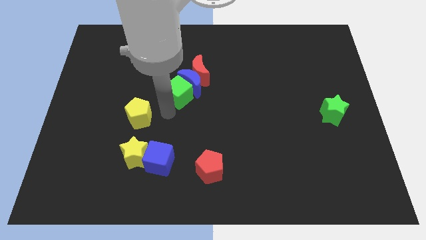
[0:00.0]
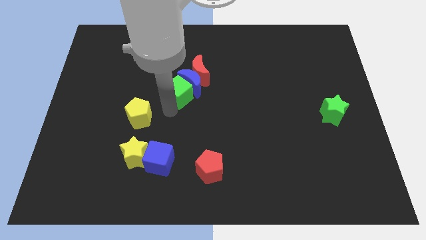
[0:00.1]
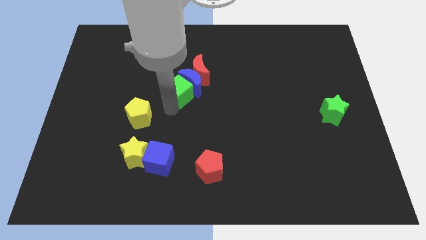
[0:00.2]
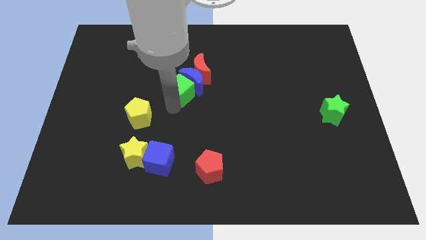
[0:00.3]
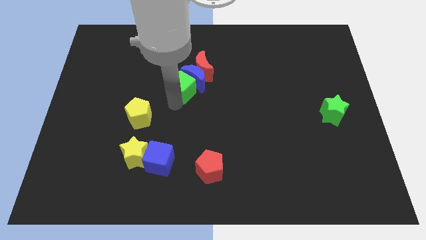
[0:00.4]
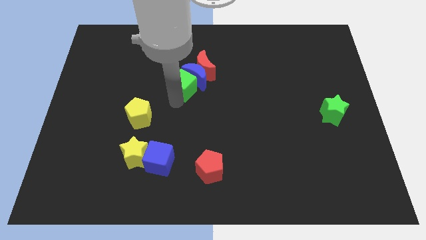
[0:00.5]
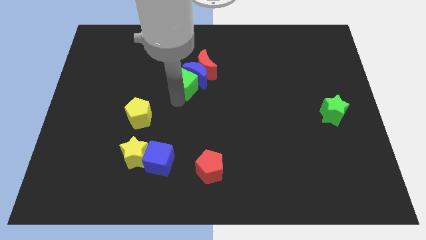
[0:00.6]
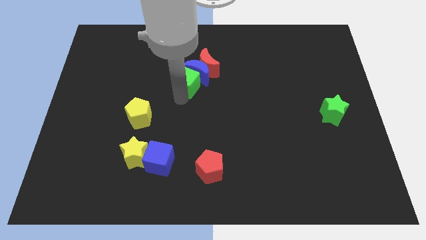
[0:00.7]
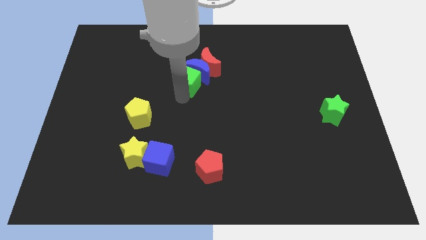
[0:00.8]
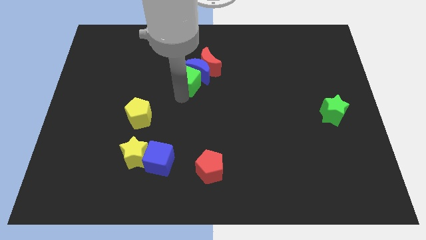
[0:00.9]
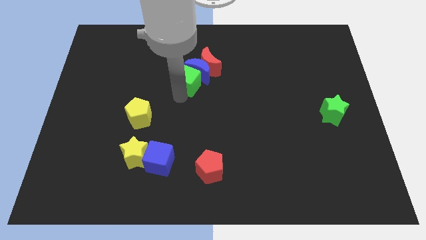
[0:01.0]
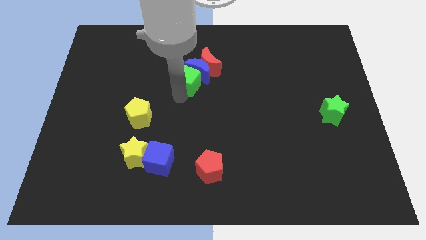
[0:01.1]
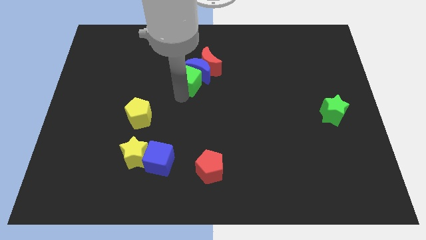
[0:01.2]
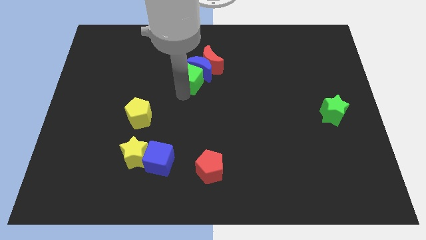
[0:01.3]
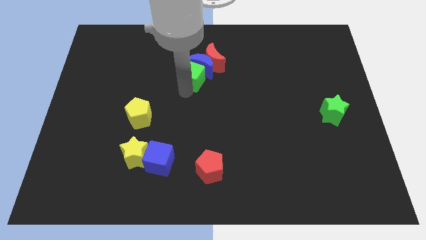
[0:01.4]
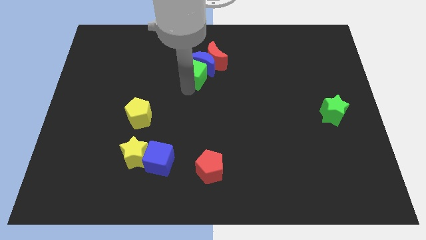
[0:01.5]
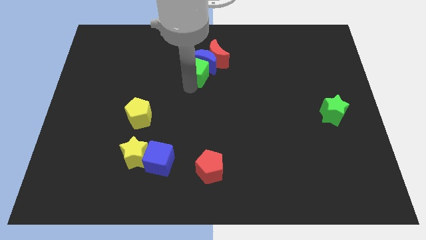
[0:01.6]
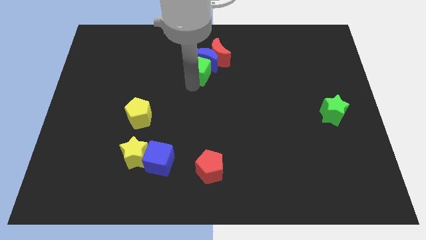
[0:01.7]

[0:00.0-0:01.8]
push the green cube below the blue crescent

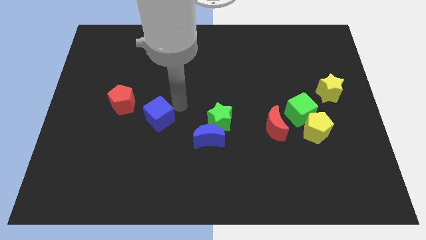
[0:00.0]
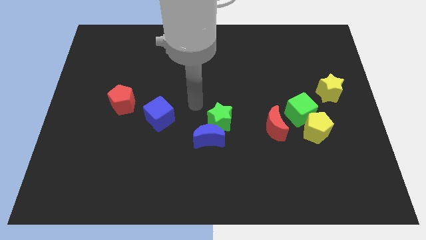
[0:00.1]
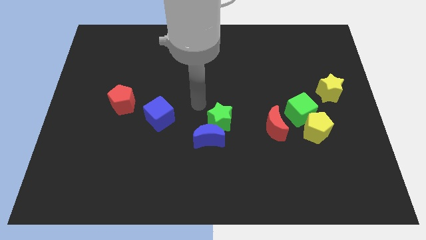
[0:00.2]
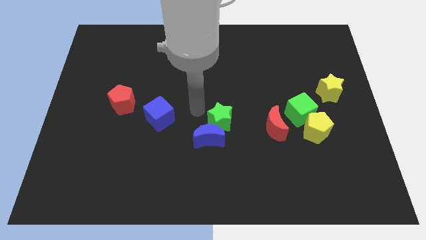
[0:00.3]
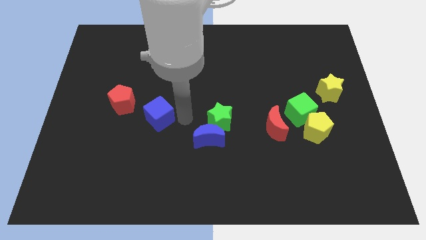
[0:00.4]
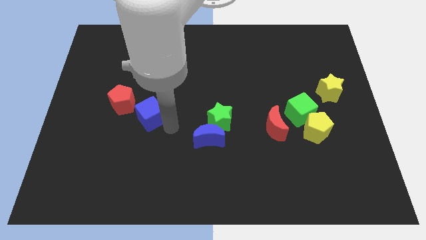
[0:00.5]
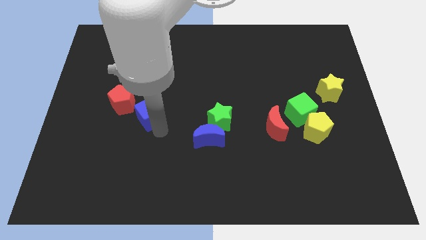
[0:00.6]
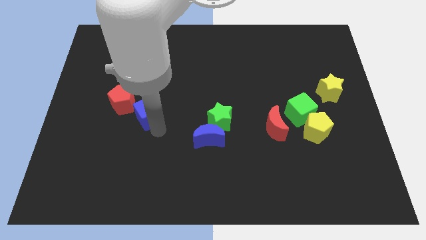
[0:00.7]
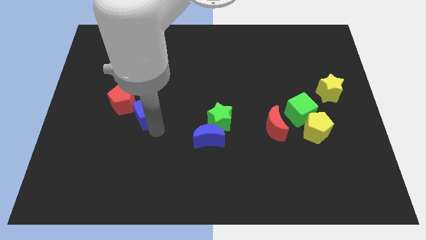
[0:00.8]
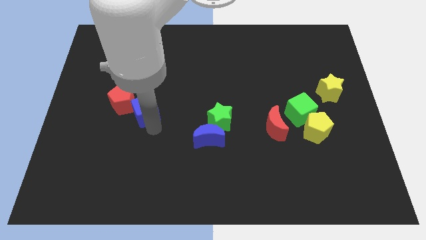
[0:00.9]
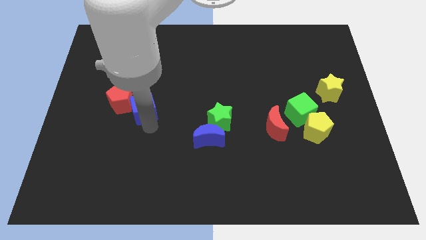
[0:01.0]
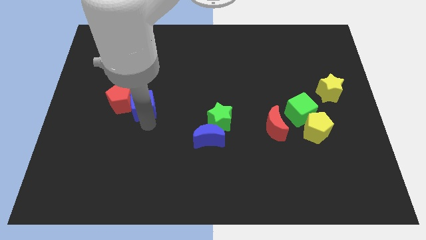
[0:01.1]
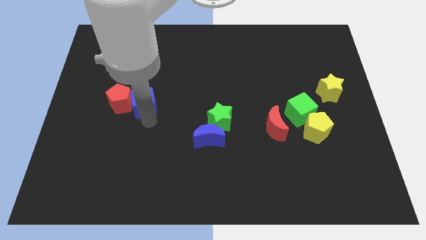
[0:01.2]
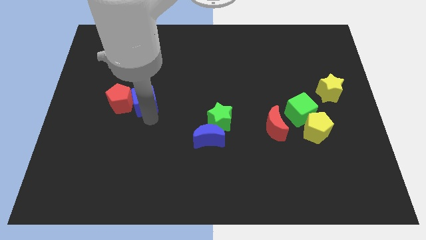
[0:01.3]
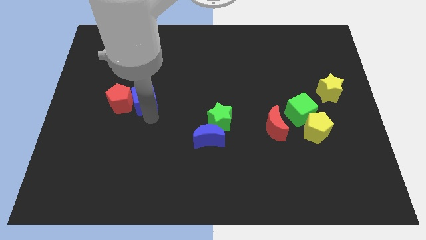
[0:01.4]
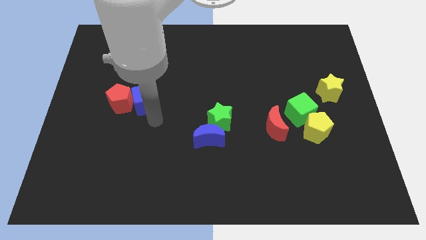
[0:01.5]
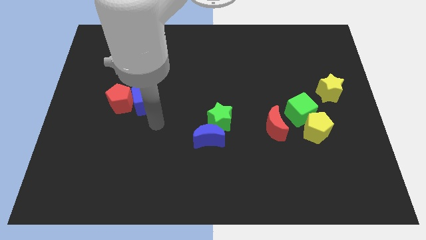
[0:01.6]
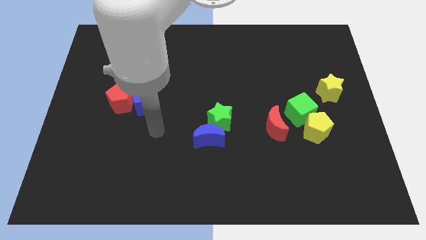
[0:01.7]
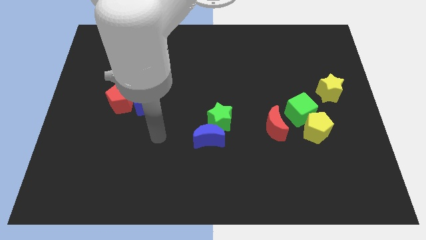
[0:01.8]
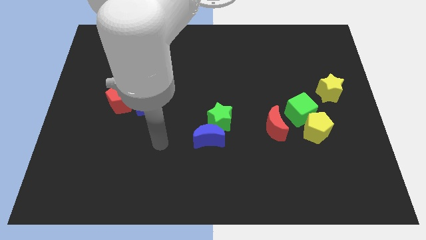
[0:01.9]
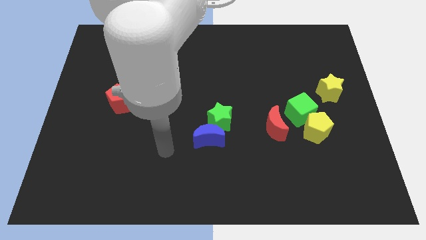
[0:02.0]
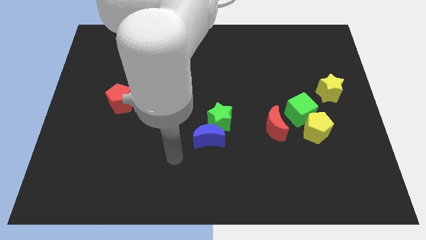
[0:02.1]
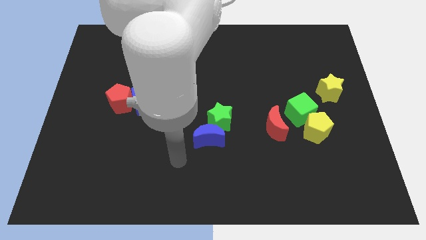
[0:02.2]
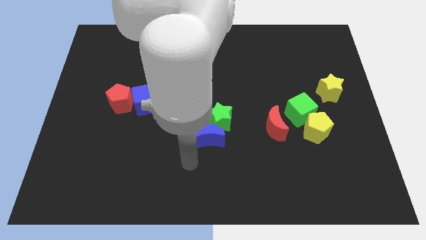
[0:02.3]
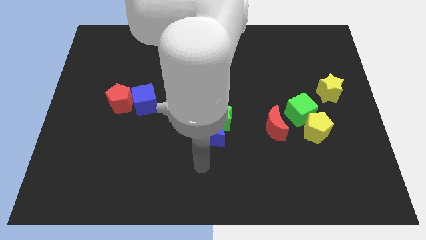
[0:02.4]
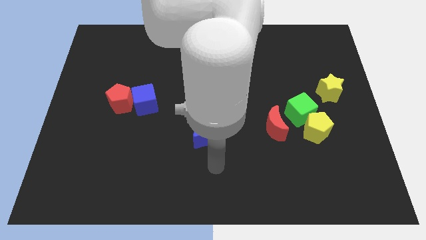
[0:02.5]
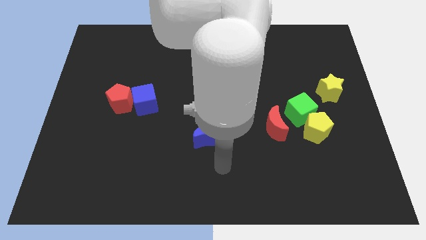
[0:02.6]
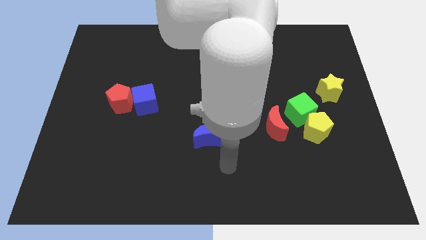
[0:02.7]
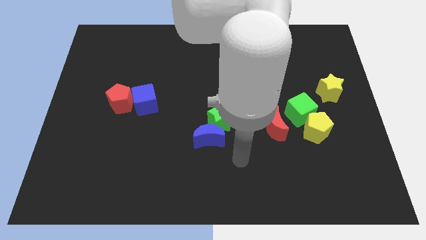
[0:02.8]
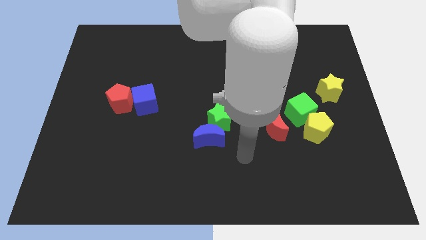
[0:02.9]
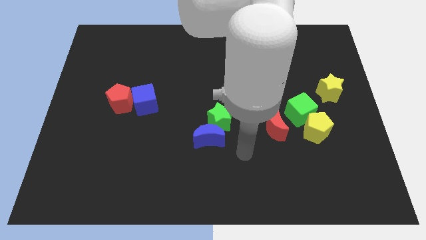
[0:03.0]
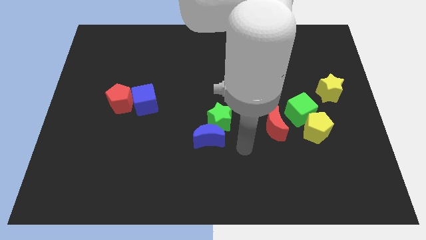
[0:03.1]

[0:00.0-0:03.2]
move blue cube into red pentagon

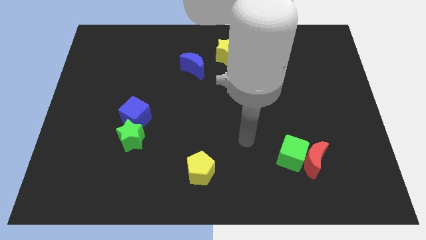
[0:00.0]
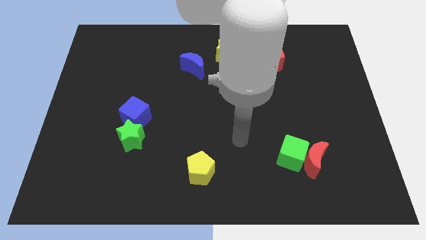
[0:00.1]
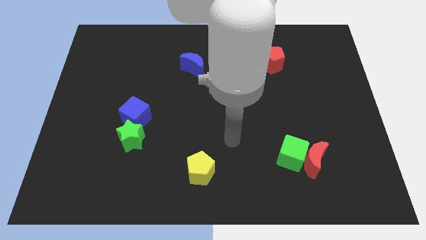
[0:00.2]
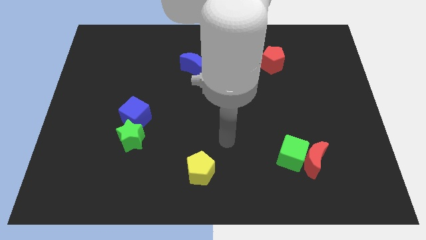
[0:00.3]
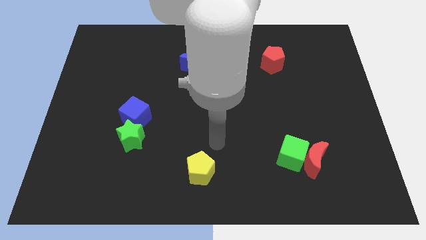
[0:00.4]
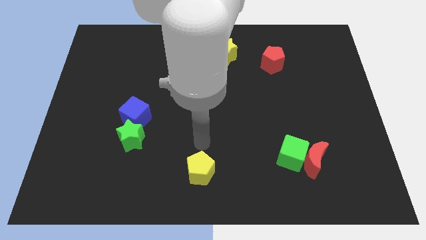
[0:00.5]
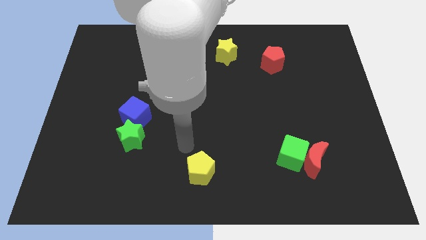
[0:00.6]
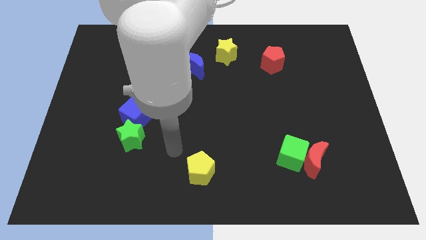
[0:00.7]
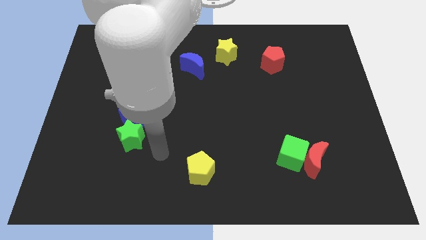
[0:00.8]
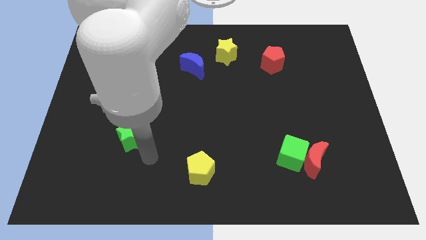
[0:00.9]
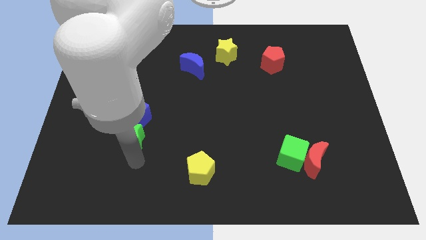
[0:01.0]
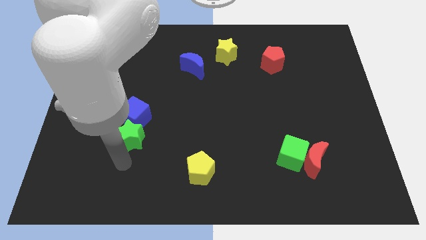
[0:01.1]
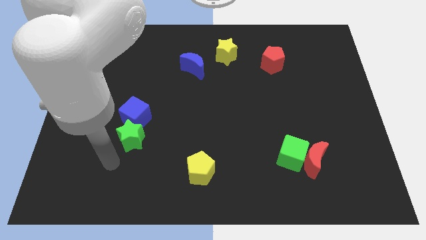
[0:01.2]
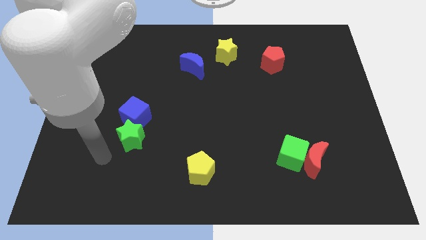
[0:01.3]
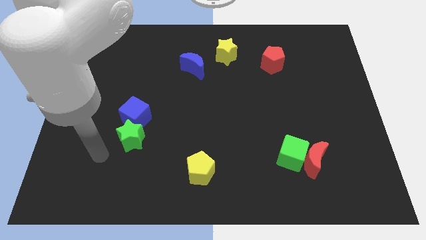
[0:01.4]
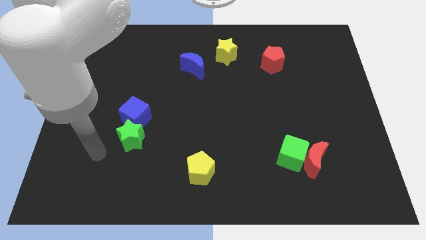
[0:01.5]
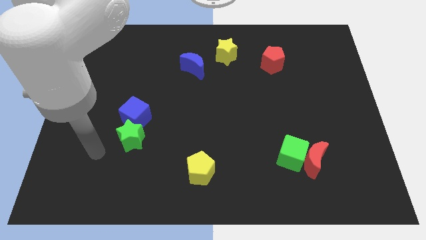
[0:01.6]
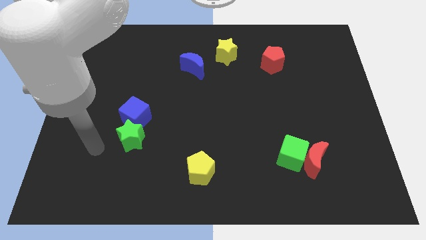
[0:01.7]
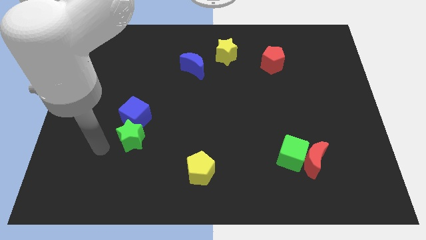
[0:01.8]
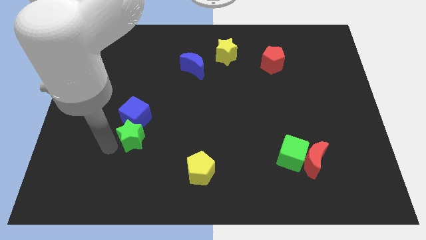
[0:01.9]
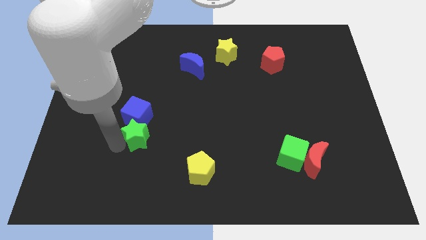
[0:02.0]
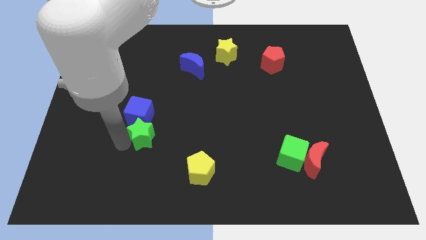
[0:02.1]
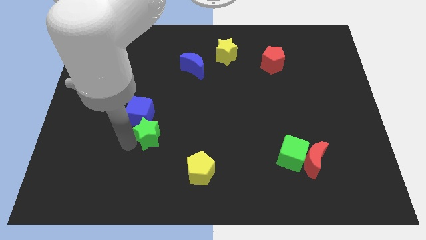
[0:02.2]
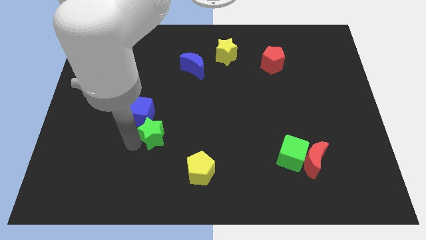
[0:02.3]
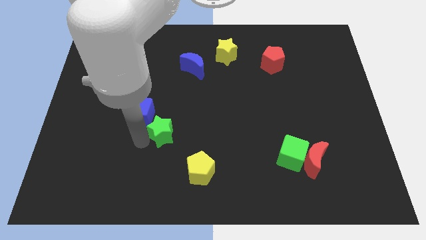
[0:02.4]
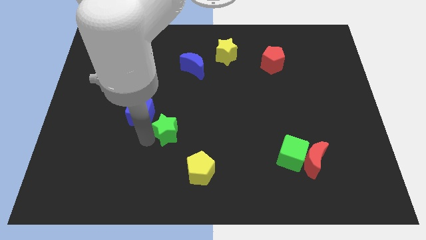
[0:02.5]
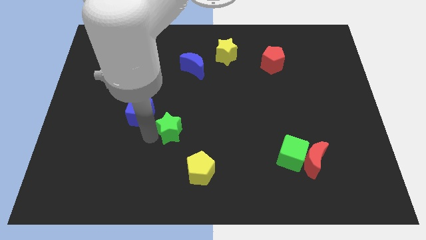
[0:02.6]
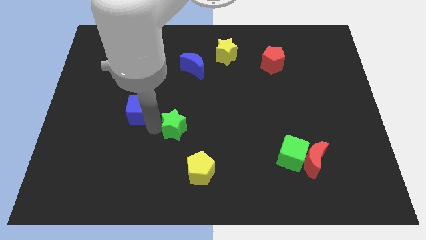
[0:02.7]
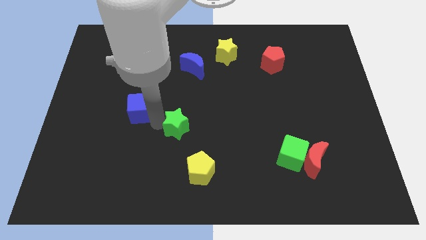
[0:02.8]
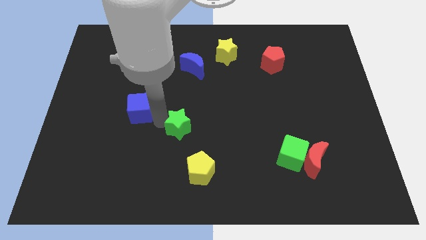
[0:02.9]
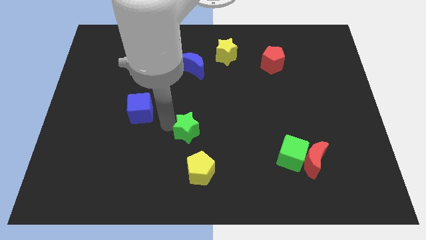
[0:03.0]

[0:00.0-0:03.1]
move the green star away from the blue cube

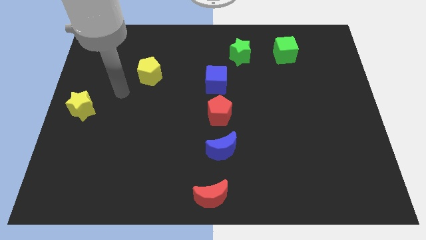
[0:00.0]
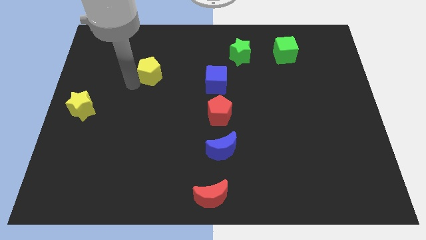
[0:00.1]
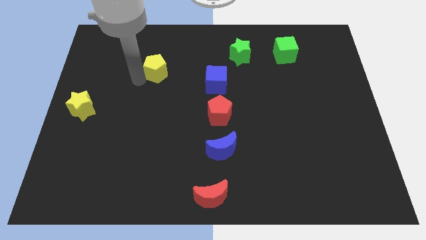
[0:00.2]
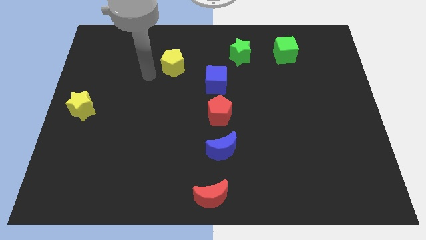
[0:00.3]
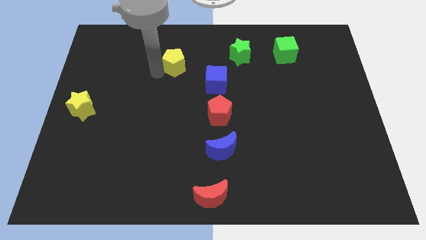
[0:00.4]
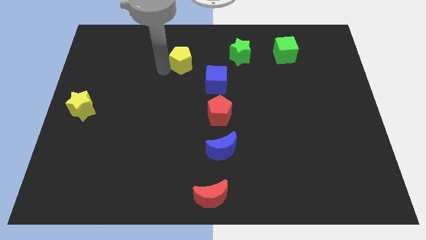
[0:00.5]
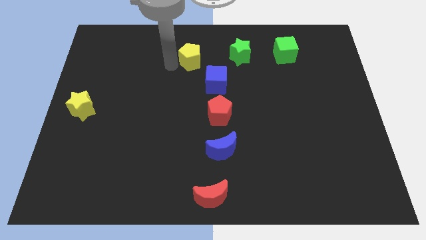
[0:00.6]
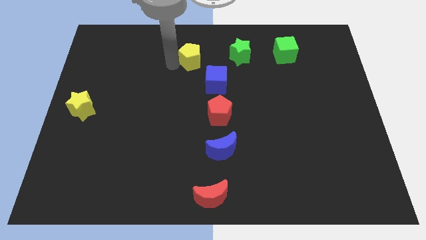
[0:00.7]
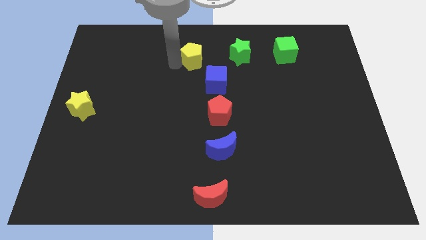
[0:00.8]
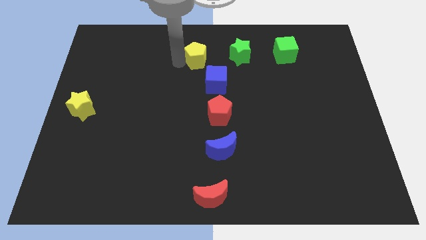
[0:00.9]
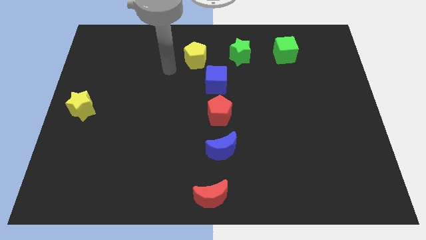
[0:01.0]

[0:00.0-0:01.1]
push the yellow pentagon towards the top left of the blue cube
